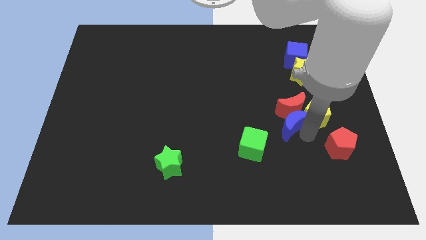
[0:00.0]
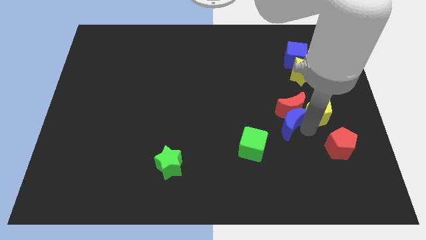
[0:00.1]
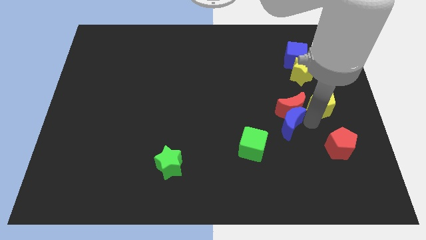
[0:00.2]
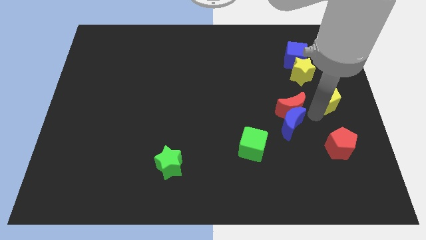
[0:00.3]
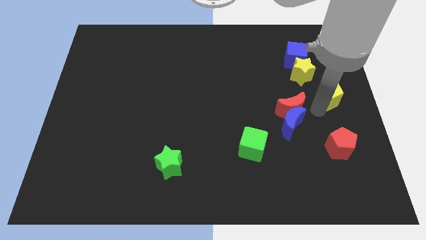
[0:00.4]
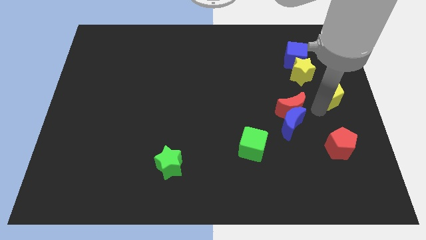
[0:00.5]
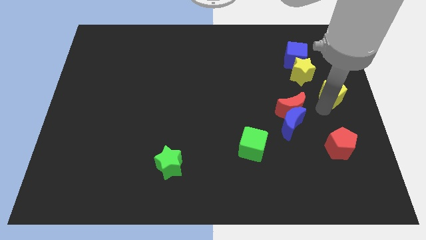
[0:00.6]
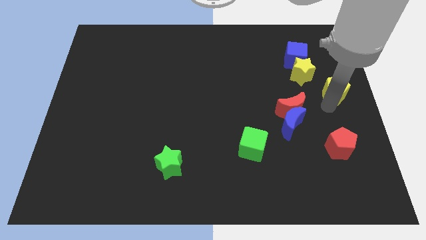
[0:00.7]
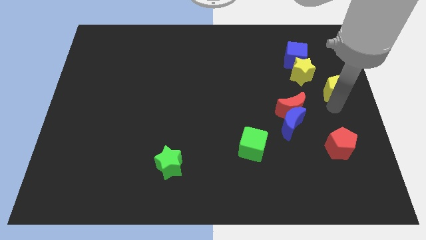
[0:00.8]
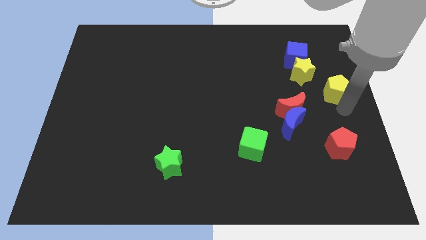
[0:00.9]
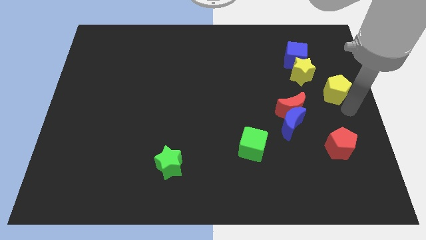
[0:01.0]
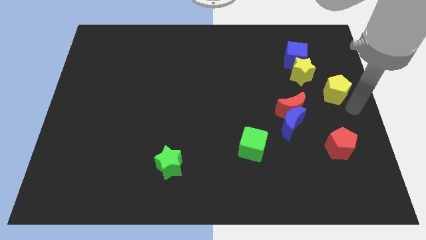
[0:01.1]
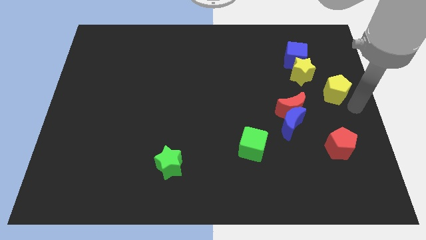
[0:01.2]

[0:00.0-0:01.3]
drag the yellow pentagon vertically above the red pentagon

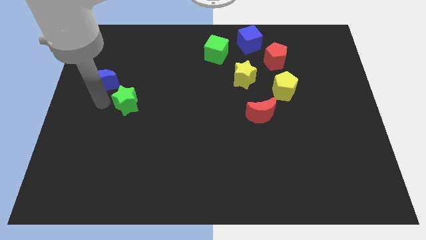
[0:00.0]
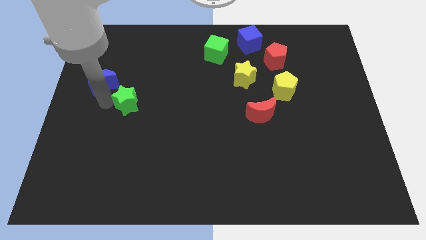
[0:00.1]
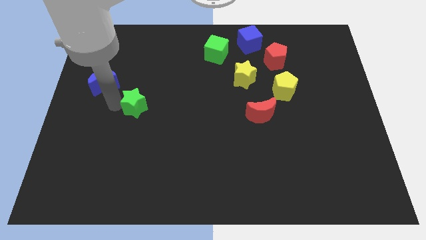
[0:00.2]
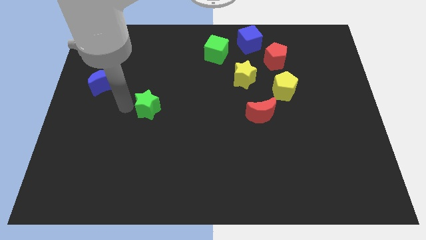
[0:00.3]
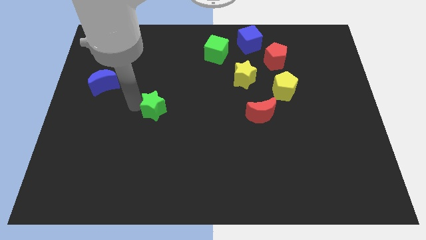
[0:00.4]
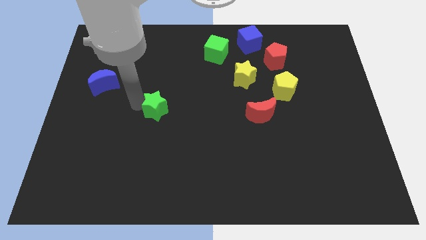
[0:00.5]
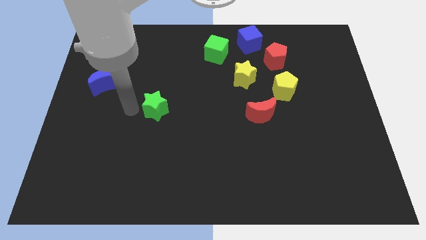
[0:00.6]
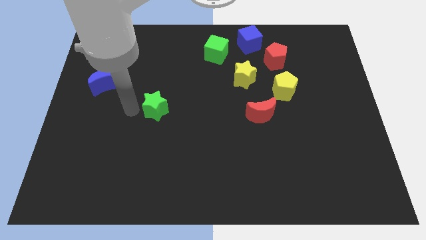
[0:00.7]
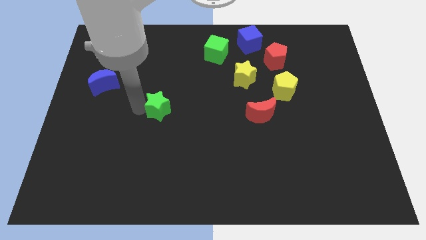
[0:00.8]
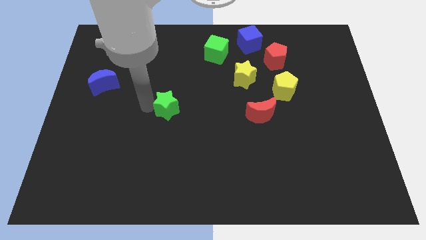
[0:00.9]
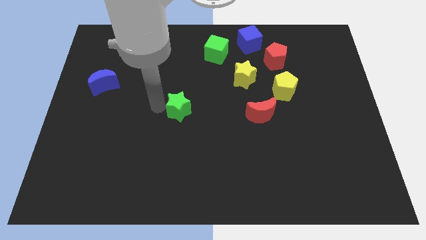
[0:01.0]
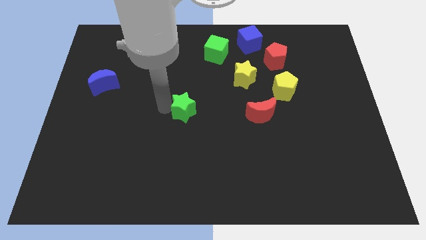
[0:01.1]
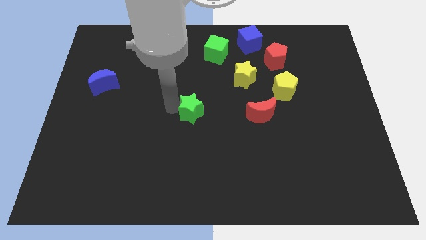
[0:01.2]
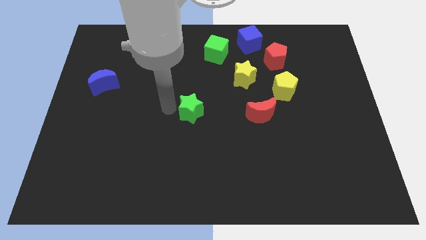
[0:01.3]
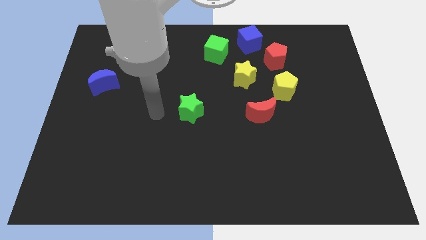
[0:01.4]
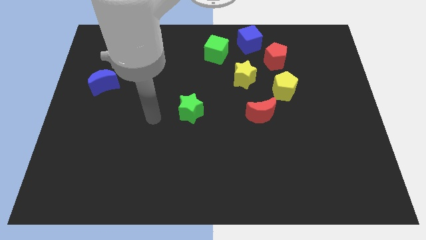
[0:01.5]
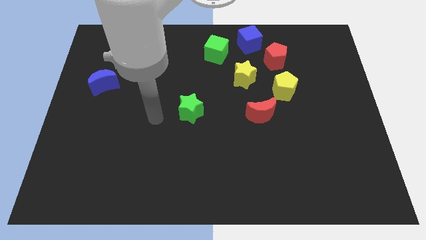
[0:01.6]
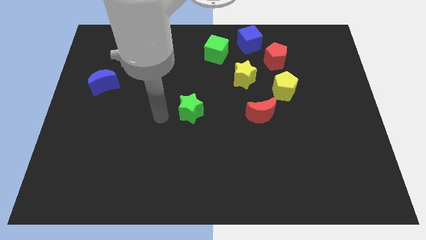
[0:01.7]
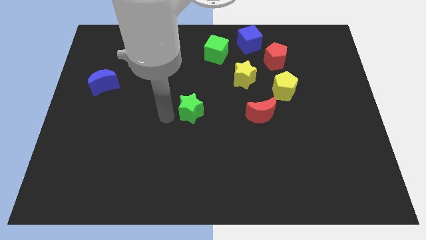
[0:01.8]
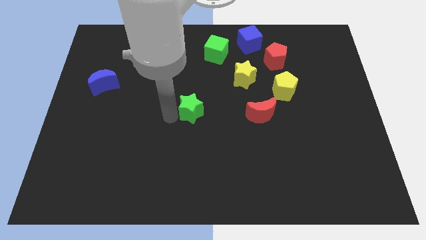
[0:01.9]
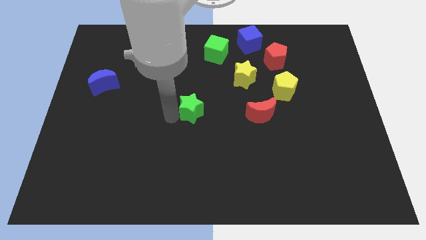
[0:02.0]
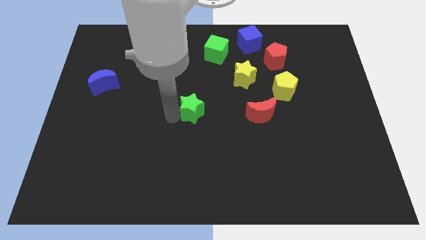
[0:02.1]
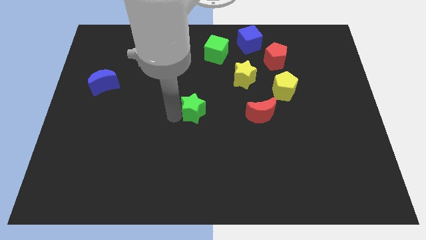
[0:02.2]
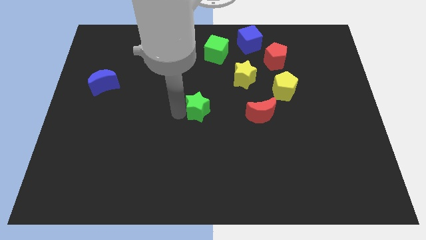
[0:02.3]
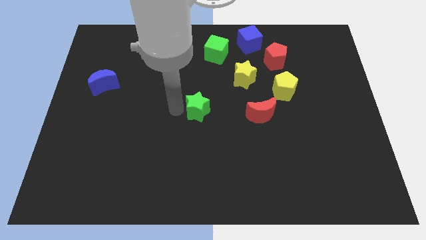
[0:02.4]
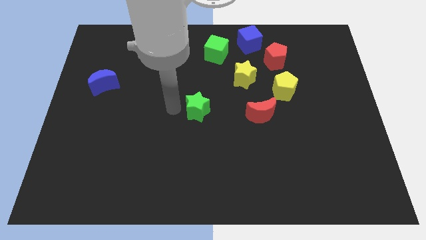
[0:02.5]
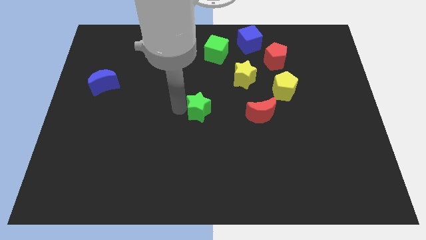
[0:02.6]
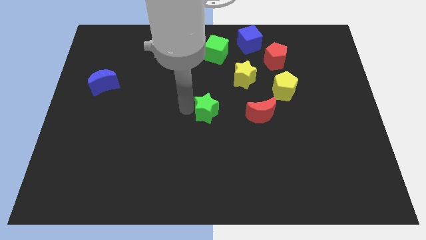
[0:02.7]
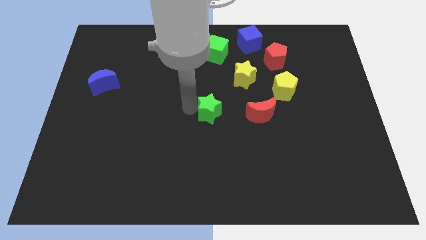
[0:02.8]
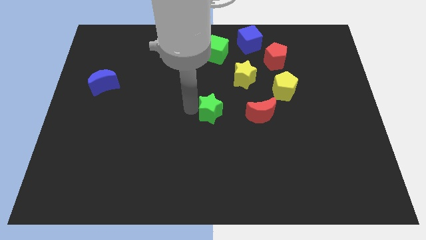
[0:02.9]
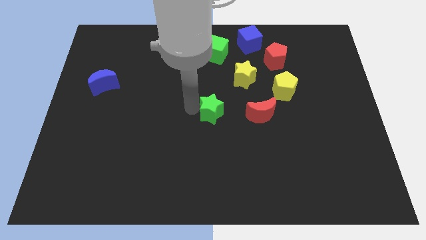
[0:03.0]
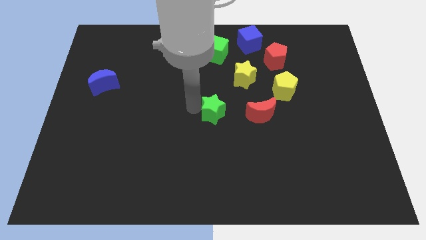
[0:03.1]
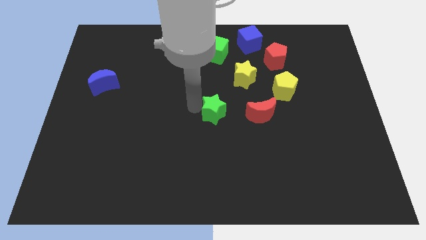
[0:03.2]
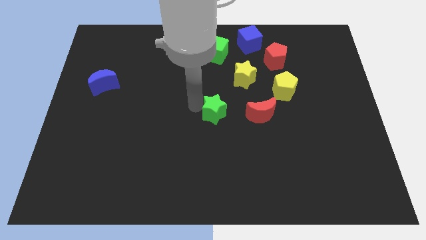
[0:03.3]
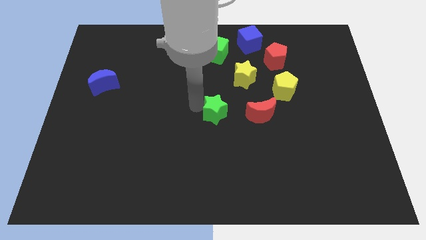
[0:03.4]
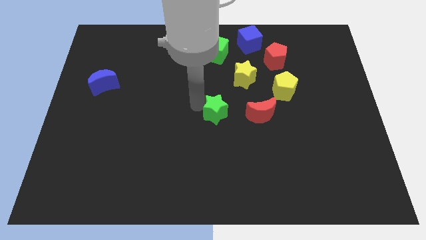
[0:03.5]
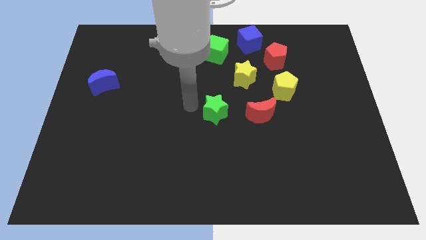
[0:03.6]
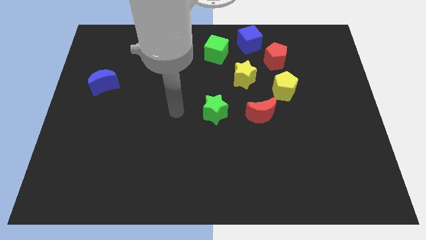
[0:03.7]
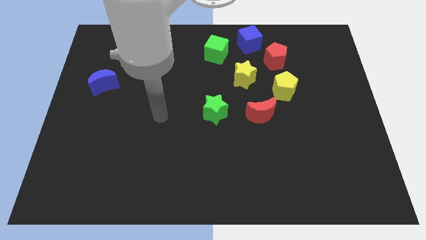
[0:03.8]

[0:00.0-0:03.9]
move the green star to the left of the red moon

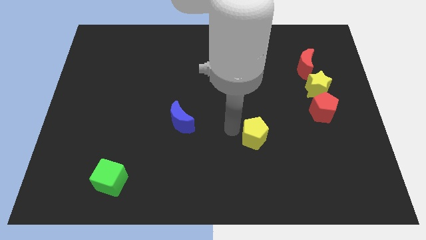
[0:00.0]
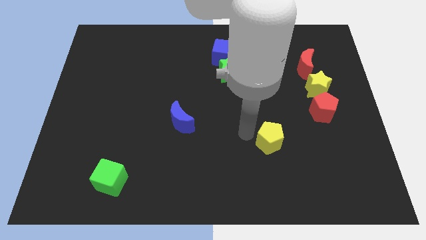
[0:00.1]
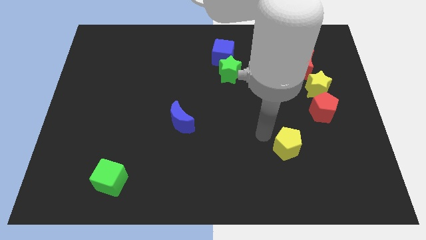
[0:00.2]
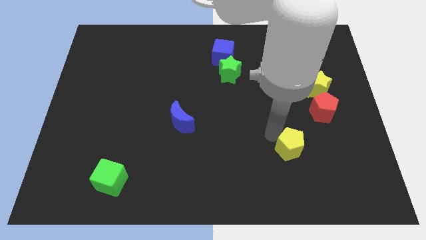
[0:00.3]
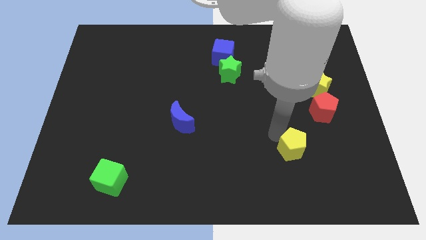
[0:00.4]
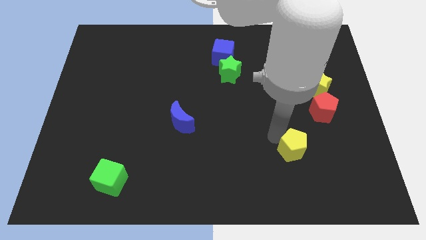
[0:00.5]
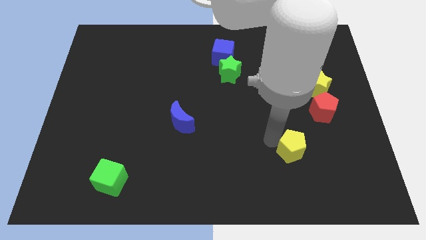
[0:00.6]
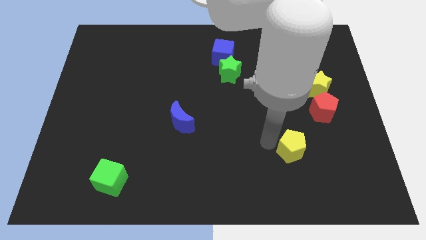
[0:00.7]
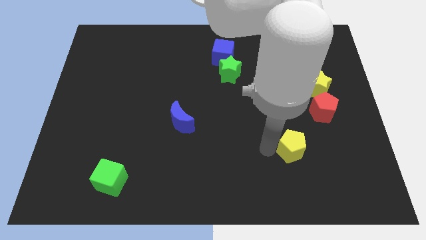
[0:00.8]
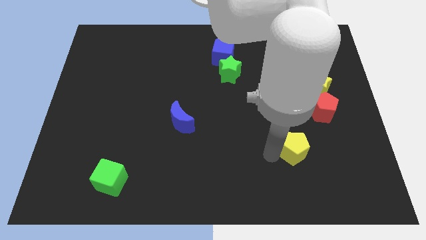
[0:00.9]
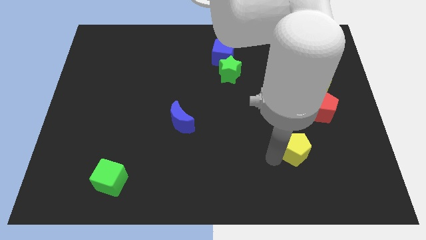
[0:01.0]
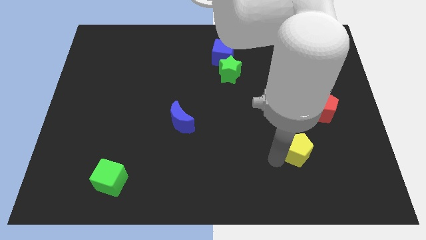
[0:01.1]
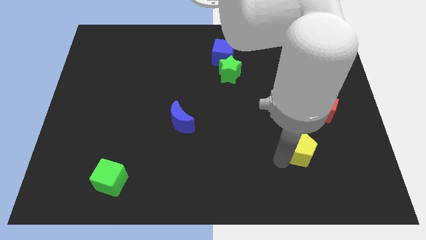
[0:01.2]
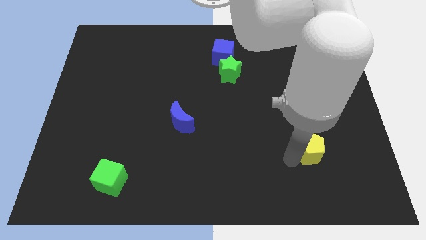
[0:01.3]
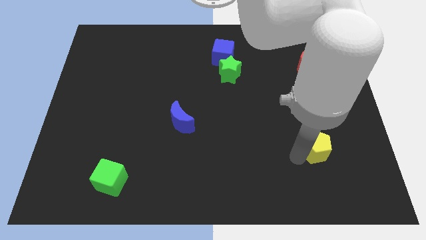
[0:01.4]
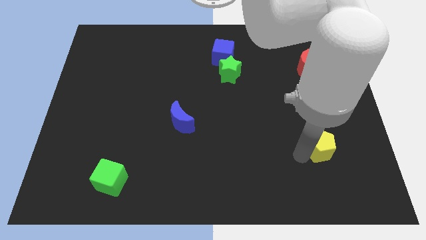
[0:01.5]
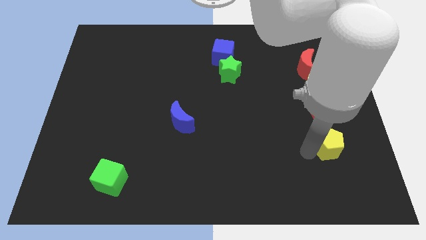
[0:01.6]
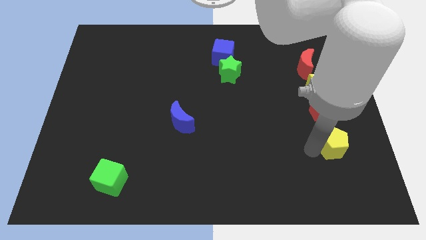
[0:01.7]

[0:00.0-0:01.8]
move the yellow pentagon to the bottom side of the red pentagon

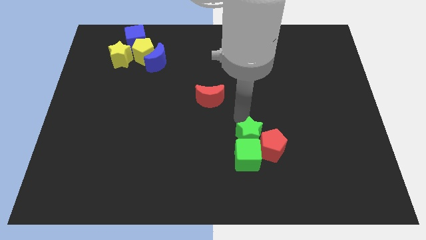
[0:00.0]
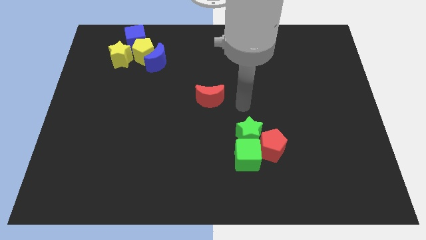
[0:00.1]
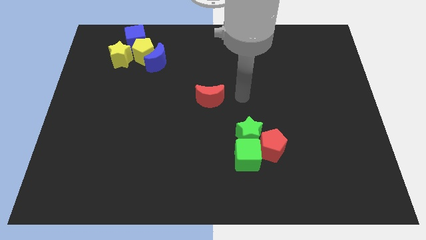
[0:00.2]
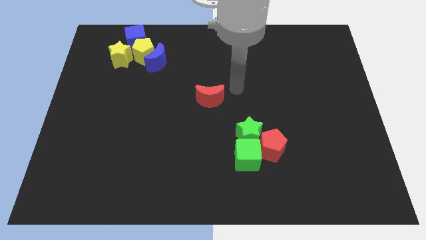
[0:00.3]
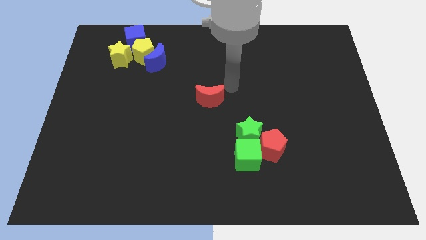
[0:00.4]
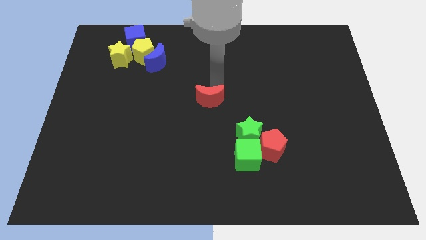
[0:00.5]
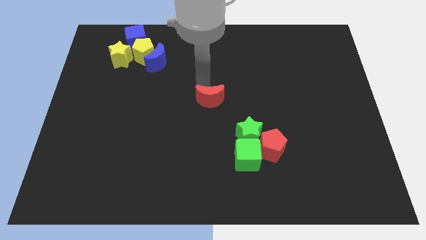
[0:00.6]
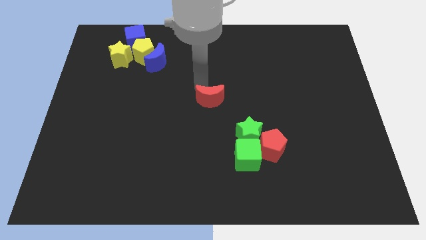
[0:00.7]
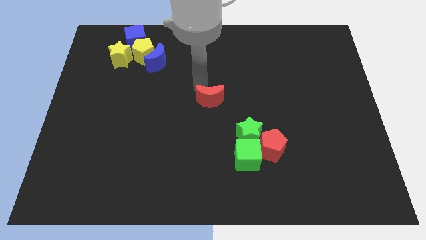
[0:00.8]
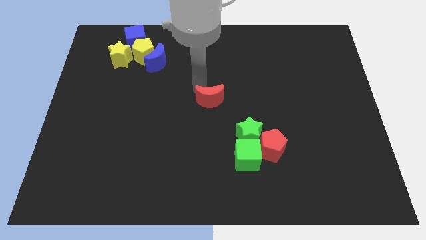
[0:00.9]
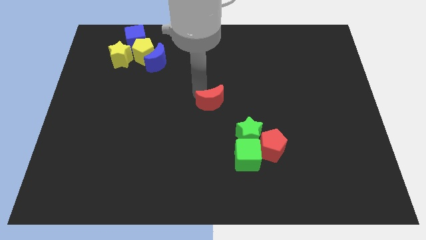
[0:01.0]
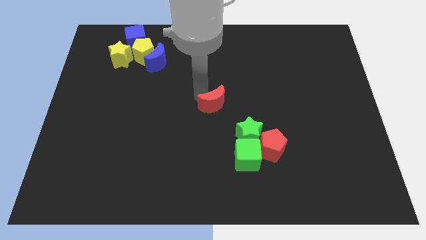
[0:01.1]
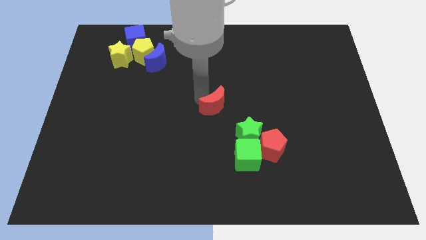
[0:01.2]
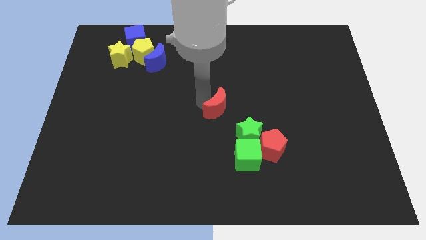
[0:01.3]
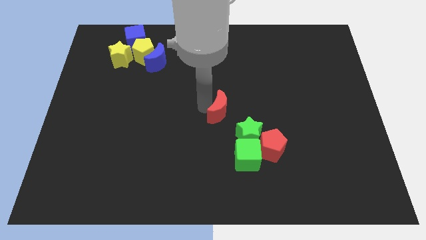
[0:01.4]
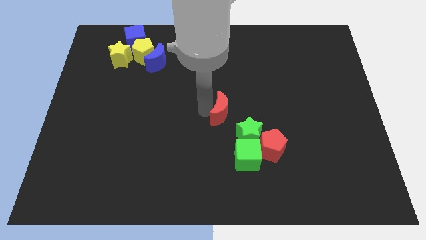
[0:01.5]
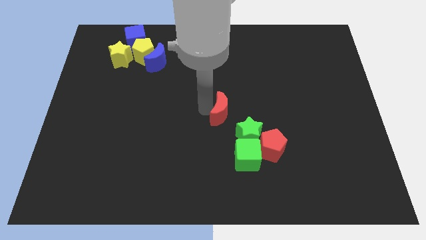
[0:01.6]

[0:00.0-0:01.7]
place the red moon diagonally top left to the green star

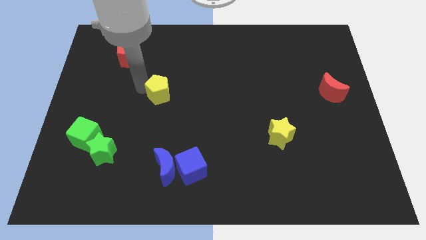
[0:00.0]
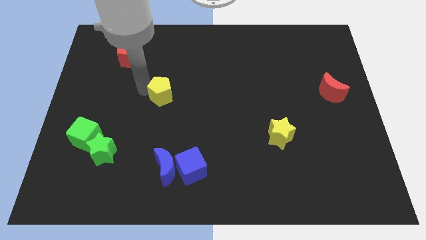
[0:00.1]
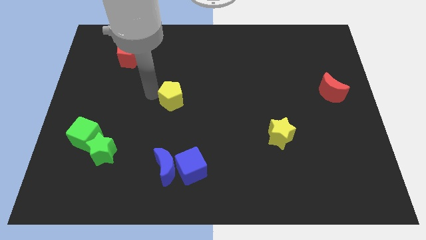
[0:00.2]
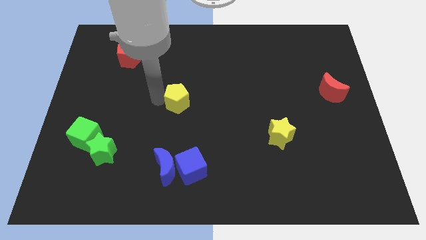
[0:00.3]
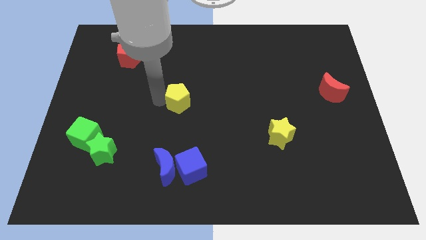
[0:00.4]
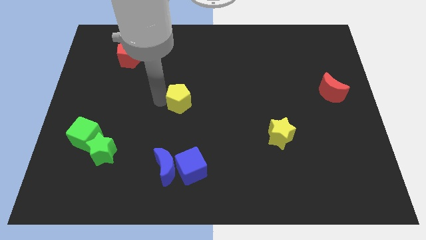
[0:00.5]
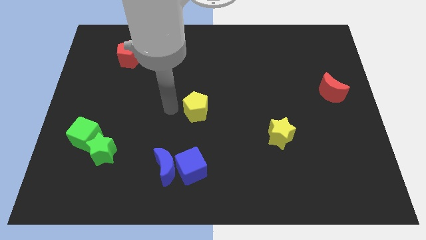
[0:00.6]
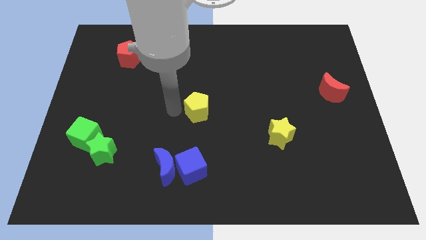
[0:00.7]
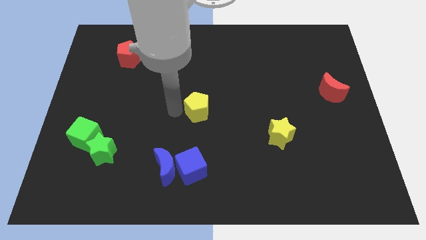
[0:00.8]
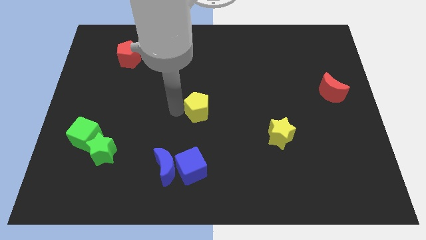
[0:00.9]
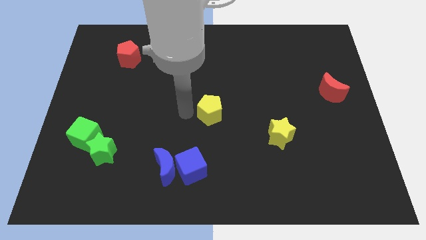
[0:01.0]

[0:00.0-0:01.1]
move yellow pentagon to the center
